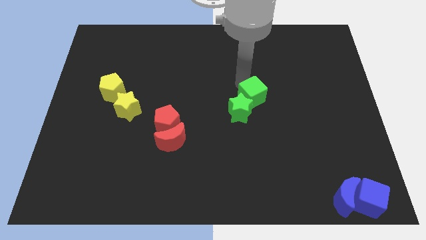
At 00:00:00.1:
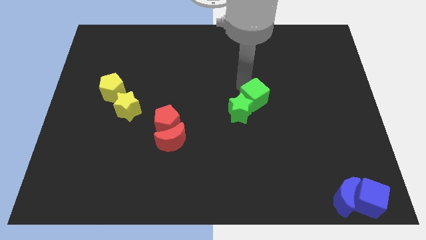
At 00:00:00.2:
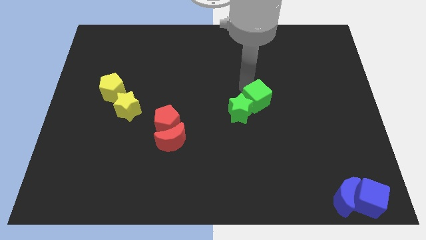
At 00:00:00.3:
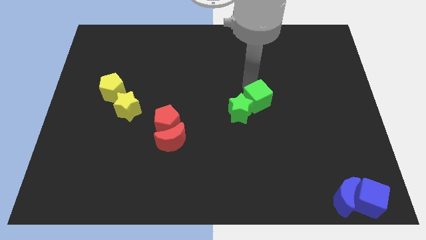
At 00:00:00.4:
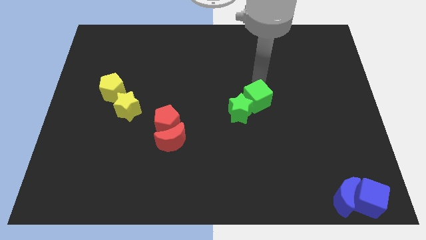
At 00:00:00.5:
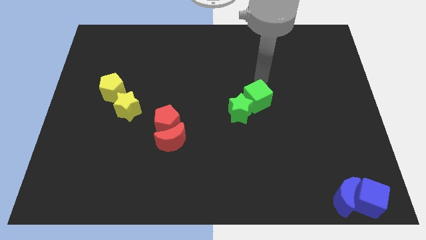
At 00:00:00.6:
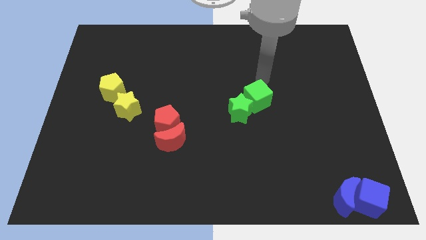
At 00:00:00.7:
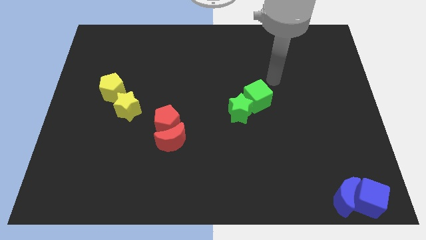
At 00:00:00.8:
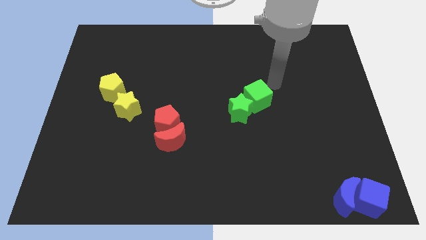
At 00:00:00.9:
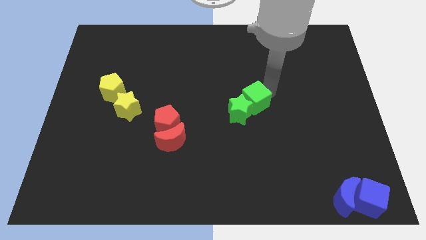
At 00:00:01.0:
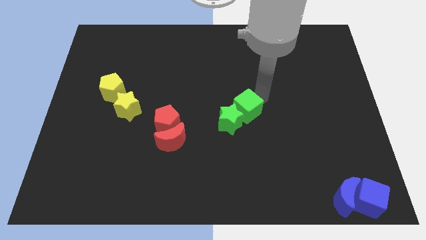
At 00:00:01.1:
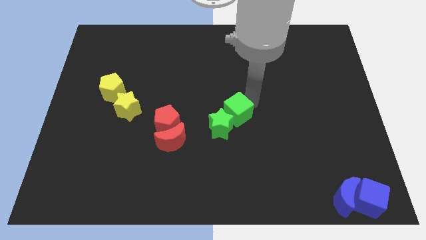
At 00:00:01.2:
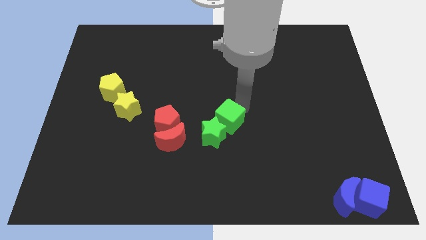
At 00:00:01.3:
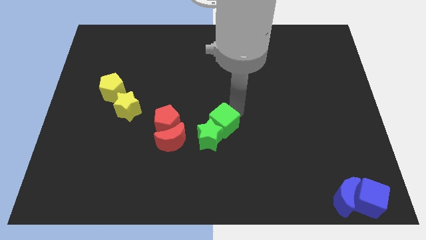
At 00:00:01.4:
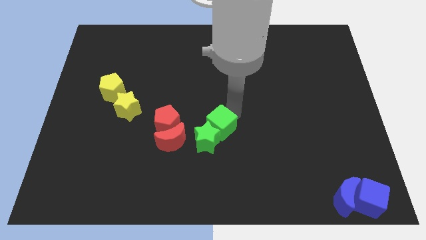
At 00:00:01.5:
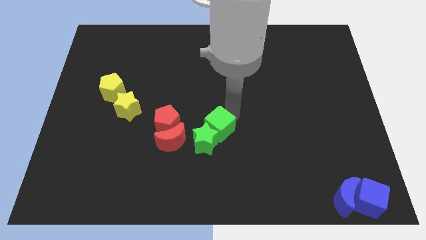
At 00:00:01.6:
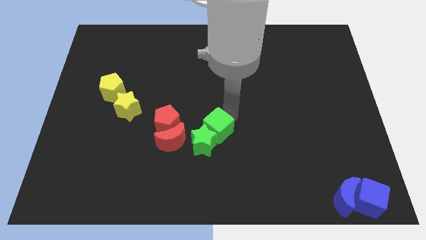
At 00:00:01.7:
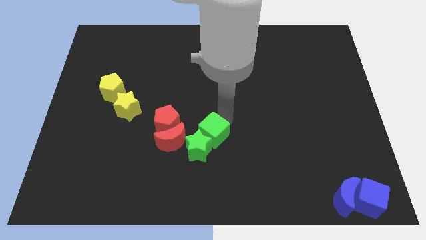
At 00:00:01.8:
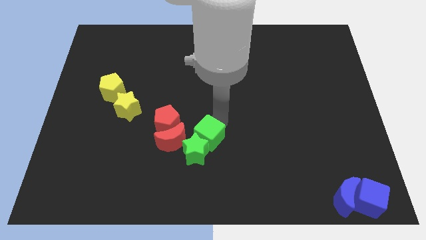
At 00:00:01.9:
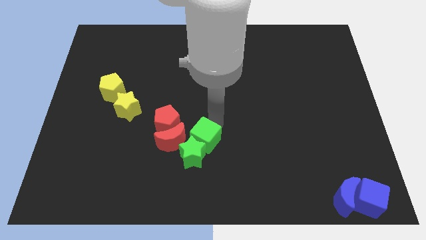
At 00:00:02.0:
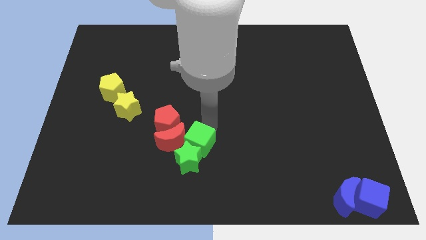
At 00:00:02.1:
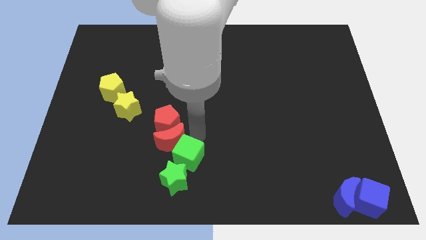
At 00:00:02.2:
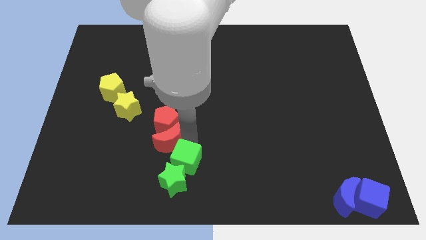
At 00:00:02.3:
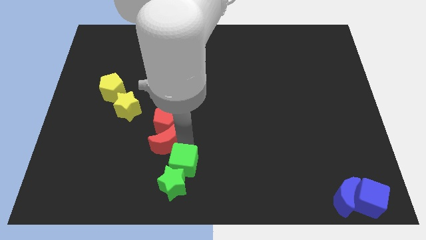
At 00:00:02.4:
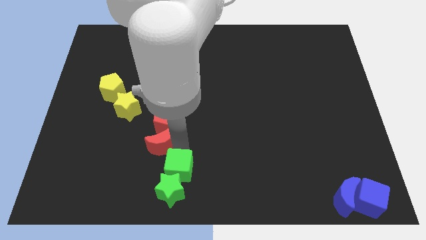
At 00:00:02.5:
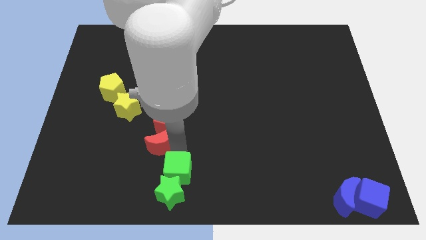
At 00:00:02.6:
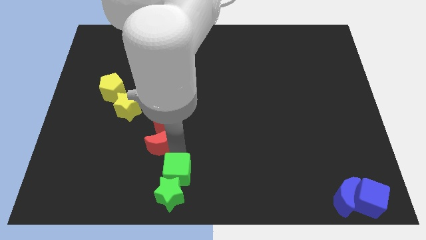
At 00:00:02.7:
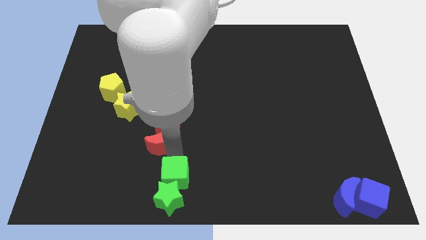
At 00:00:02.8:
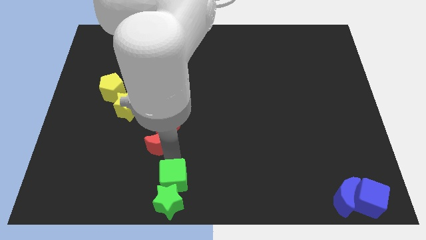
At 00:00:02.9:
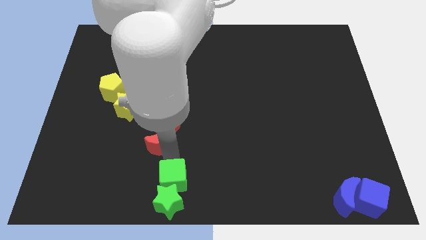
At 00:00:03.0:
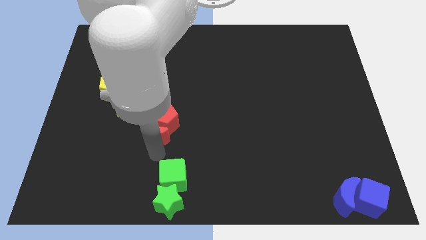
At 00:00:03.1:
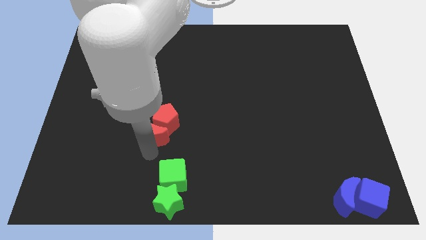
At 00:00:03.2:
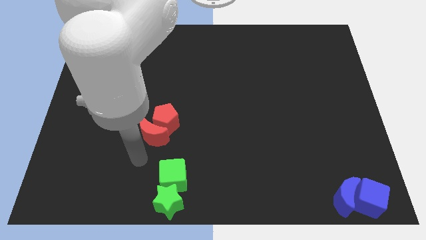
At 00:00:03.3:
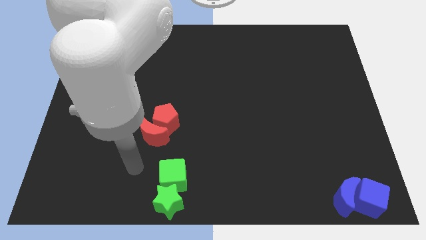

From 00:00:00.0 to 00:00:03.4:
push the green blocks towards the bottom side of the board

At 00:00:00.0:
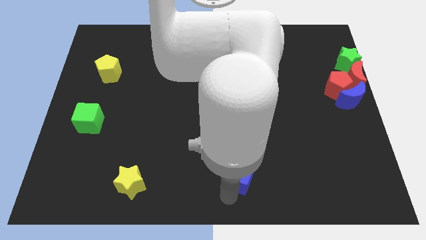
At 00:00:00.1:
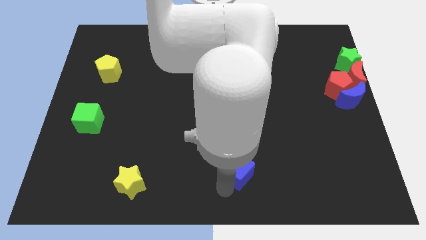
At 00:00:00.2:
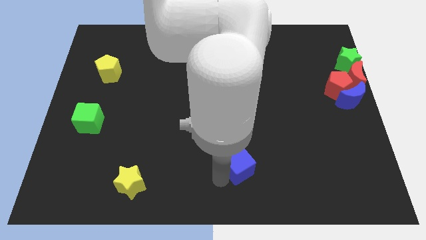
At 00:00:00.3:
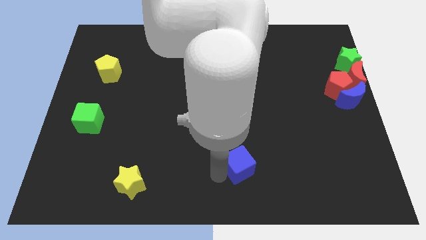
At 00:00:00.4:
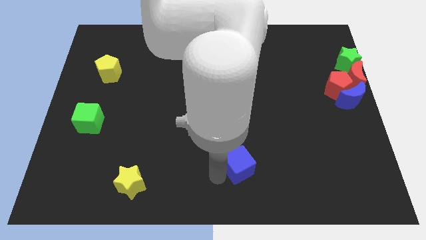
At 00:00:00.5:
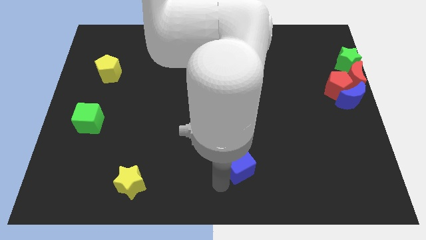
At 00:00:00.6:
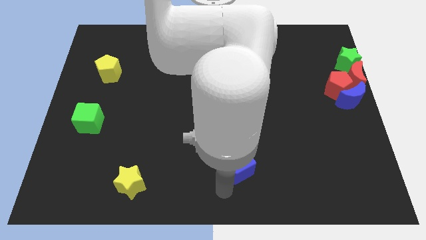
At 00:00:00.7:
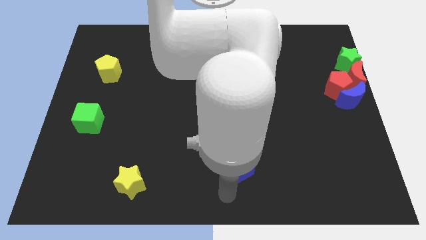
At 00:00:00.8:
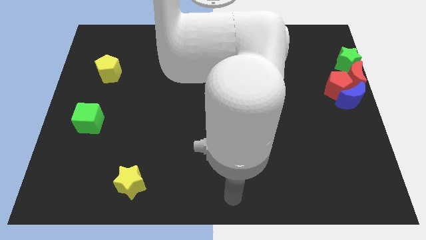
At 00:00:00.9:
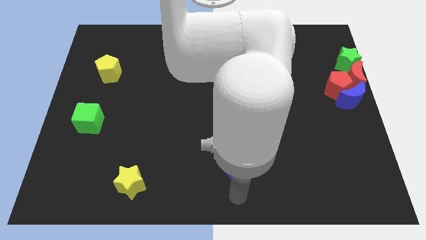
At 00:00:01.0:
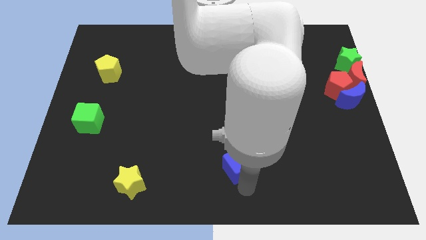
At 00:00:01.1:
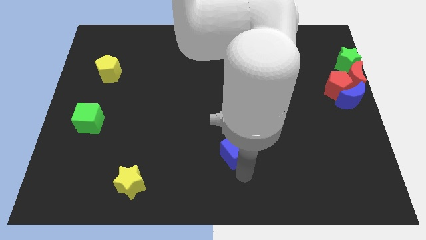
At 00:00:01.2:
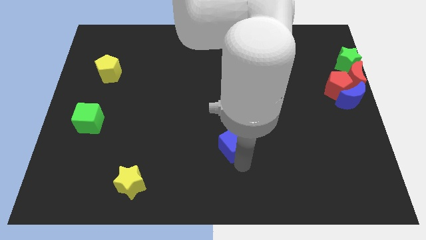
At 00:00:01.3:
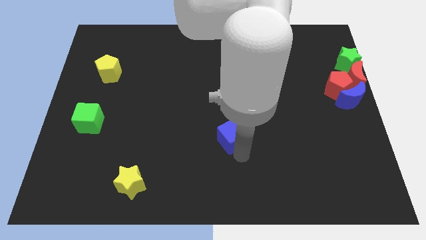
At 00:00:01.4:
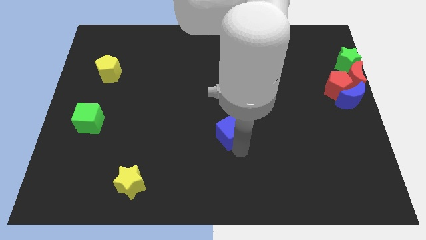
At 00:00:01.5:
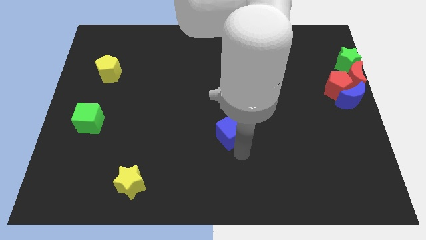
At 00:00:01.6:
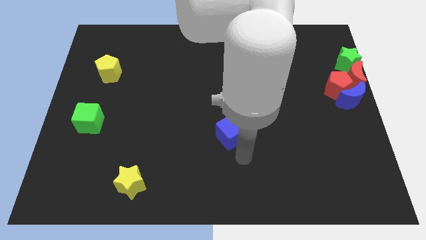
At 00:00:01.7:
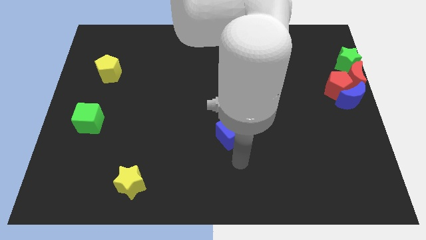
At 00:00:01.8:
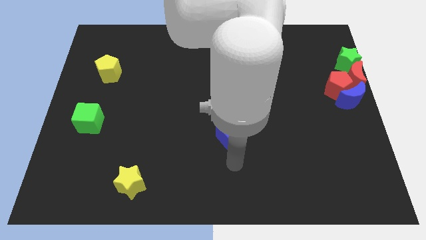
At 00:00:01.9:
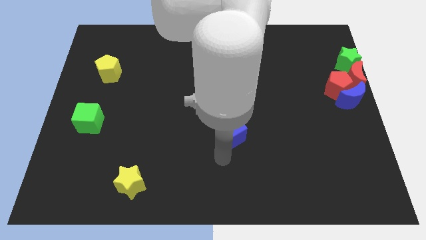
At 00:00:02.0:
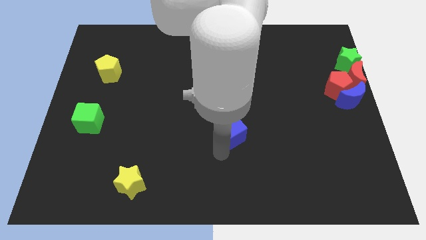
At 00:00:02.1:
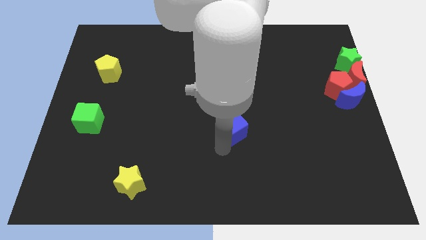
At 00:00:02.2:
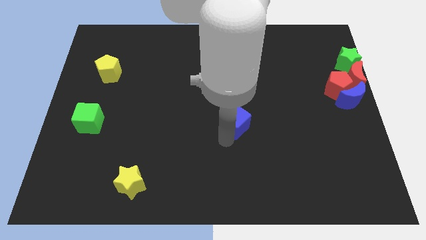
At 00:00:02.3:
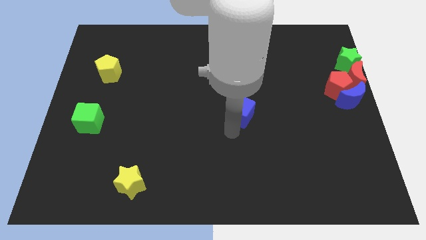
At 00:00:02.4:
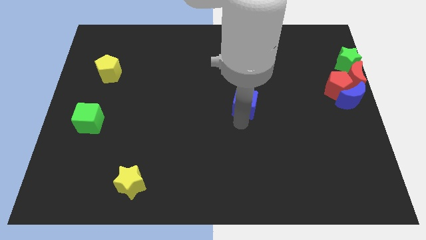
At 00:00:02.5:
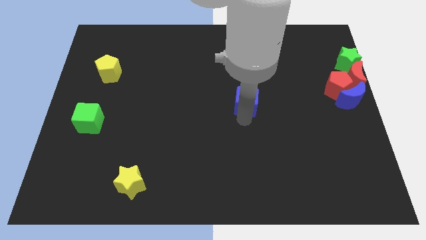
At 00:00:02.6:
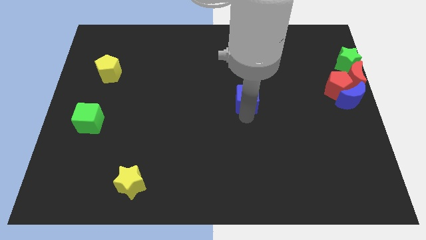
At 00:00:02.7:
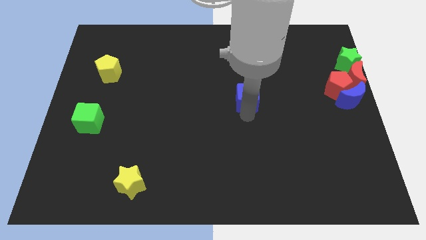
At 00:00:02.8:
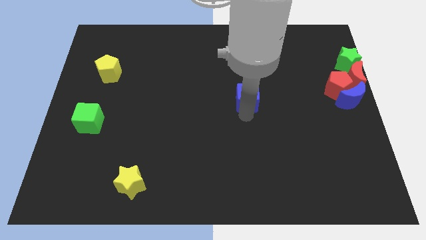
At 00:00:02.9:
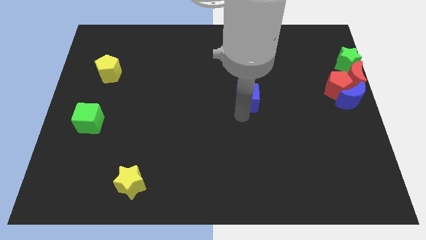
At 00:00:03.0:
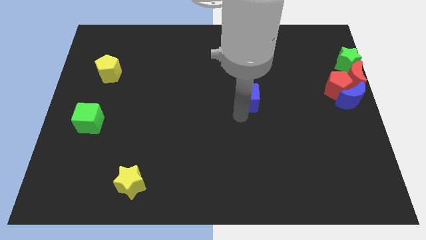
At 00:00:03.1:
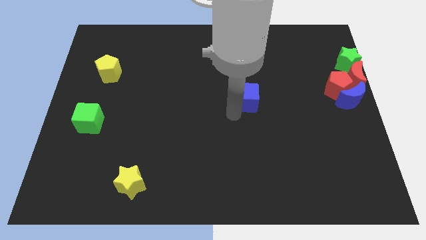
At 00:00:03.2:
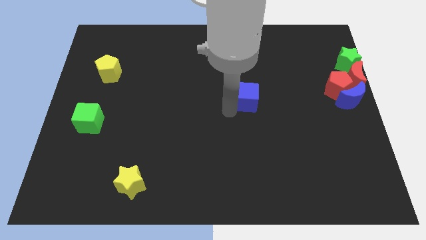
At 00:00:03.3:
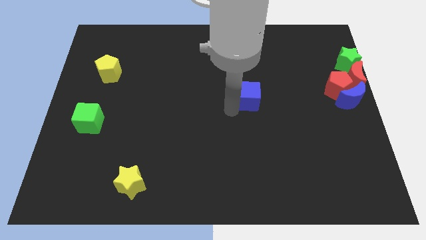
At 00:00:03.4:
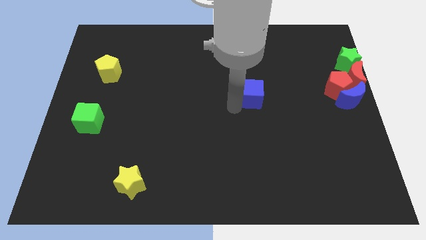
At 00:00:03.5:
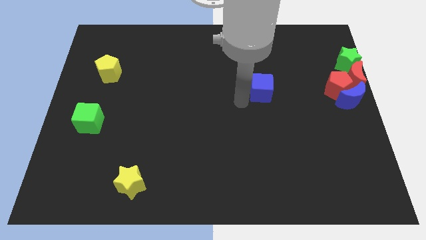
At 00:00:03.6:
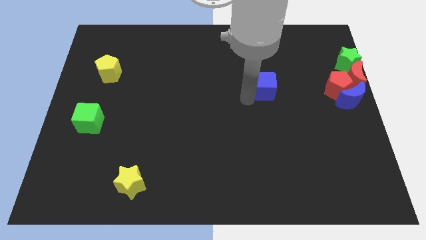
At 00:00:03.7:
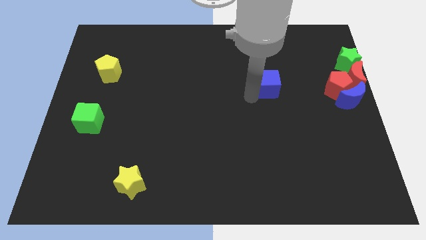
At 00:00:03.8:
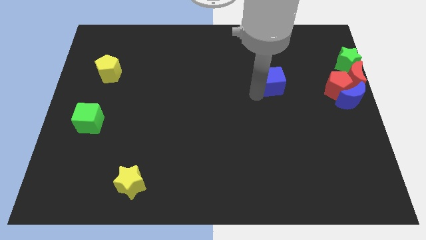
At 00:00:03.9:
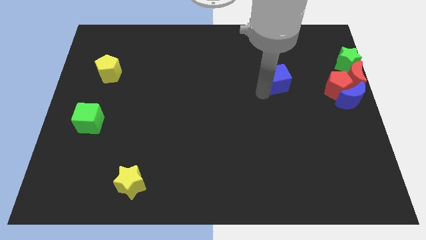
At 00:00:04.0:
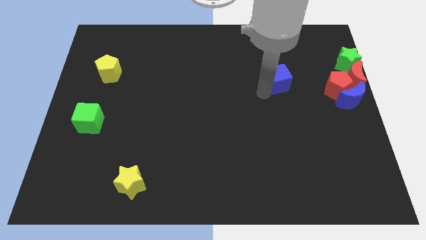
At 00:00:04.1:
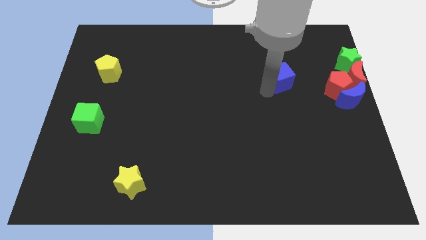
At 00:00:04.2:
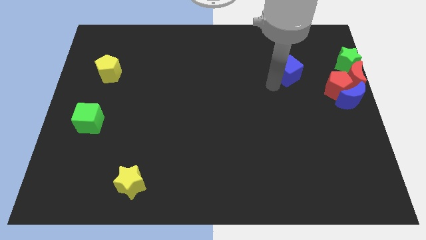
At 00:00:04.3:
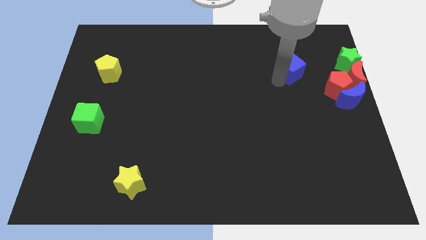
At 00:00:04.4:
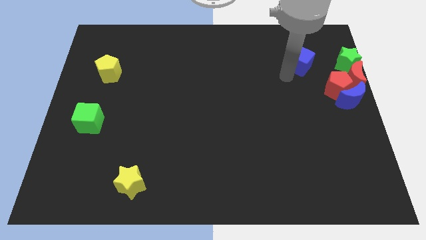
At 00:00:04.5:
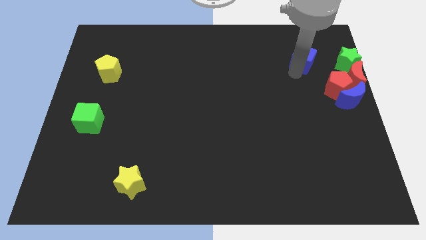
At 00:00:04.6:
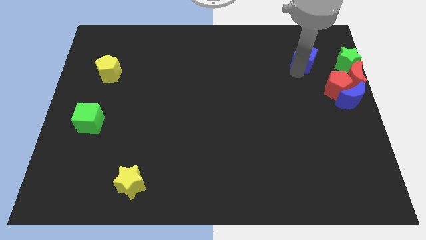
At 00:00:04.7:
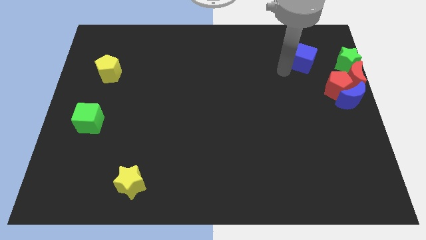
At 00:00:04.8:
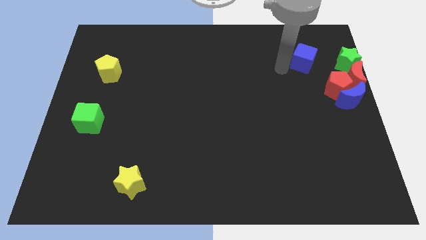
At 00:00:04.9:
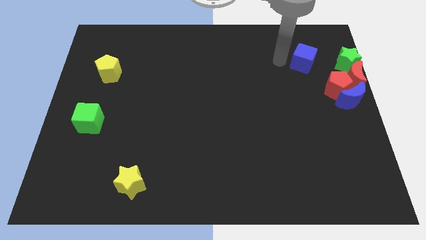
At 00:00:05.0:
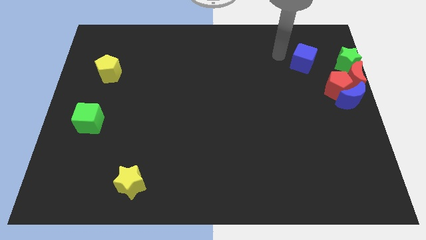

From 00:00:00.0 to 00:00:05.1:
place the blue cube parallel to green star

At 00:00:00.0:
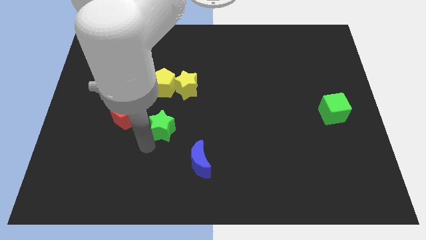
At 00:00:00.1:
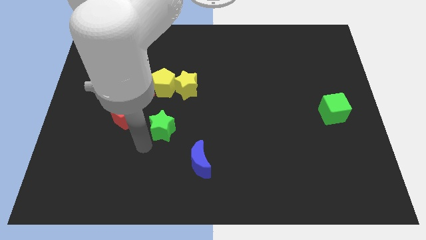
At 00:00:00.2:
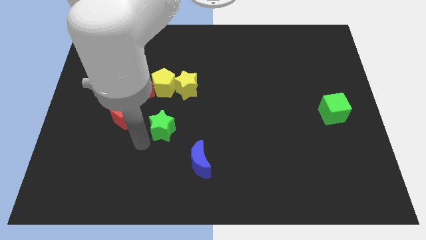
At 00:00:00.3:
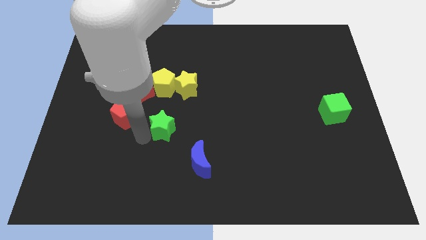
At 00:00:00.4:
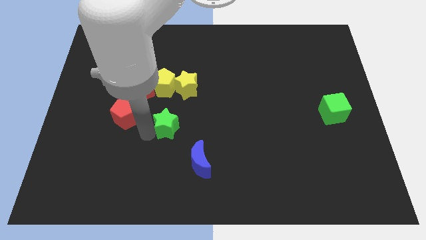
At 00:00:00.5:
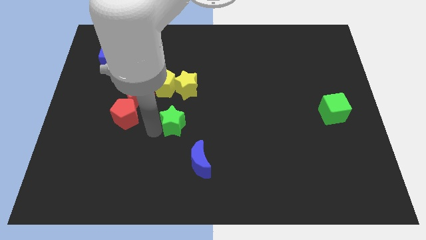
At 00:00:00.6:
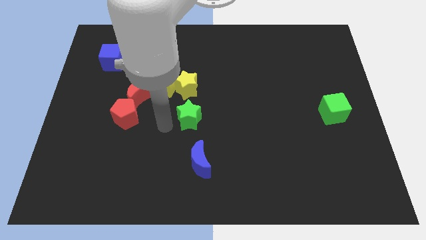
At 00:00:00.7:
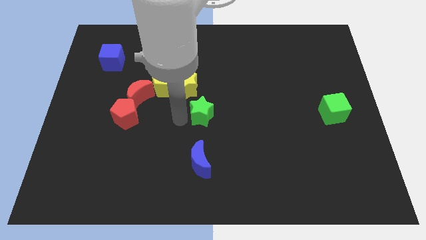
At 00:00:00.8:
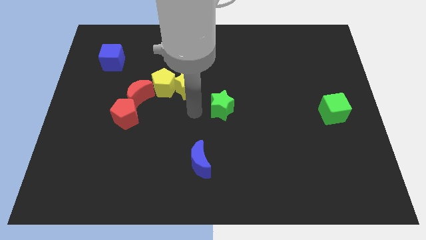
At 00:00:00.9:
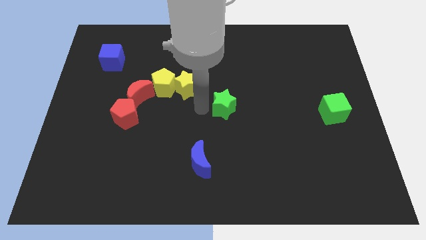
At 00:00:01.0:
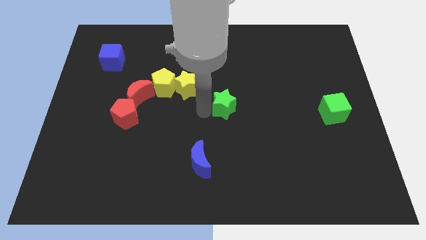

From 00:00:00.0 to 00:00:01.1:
push the green star towards the center of the board
